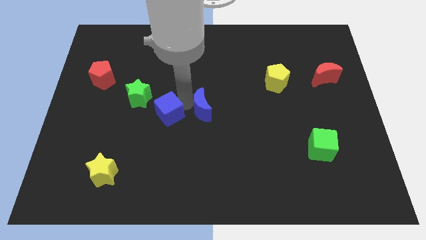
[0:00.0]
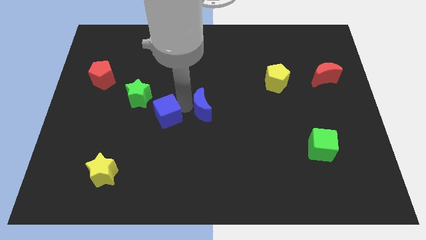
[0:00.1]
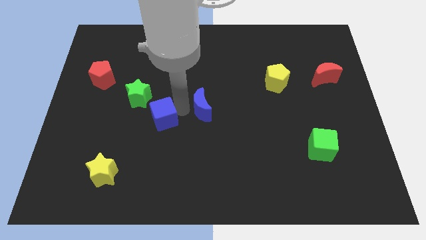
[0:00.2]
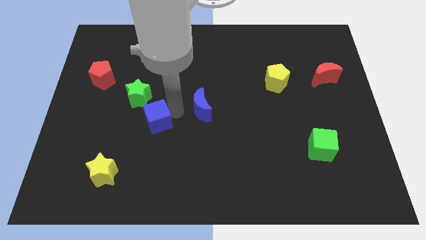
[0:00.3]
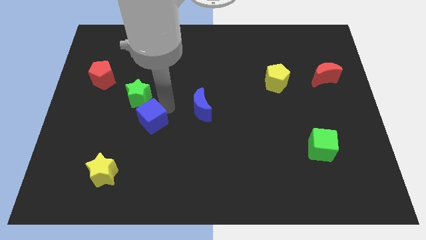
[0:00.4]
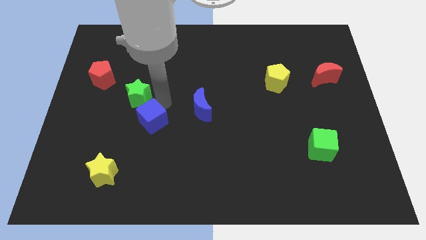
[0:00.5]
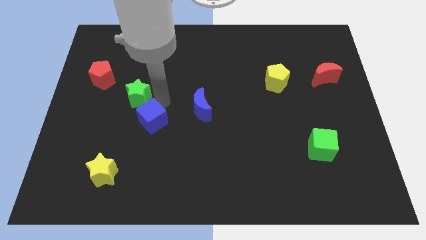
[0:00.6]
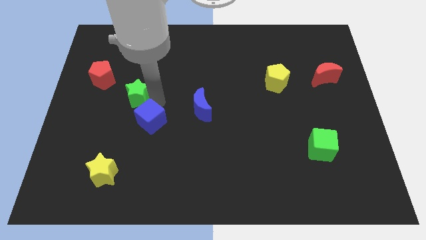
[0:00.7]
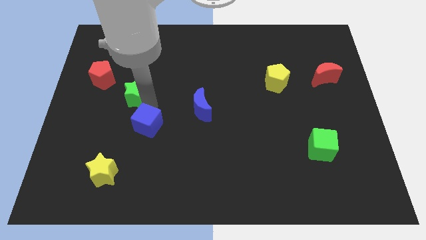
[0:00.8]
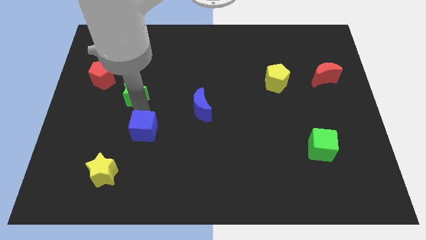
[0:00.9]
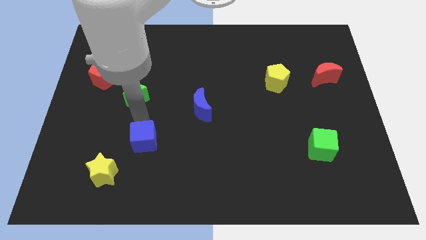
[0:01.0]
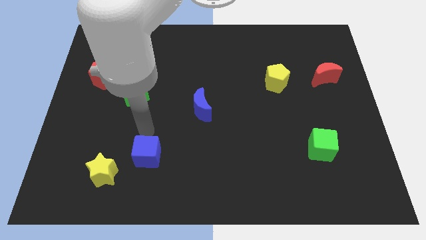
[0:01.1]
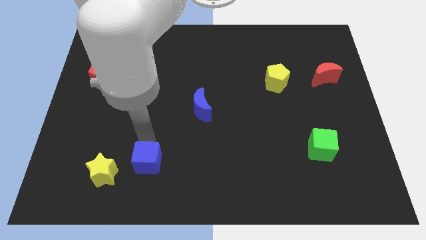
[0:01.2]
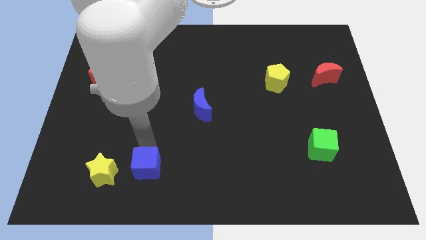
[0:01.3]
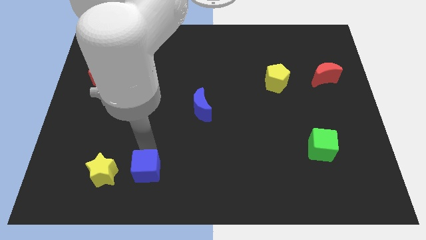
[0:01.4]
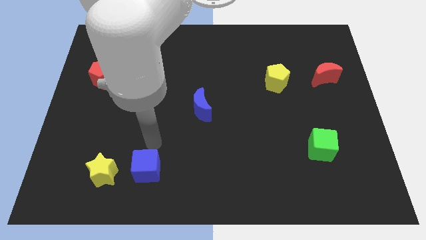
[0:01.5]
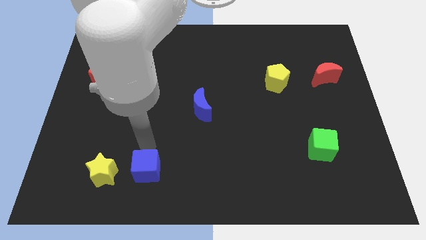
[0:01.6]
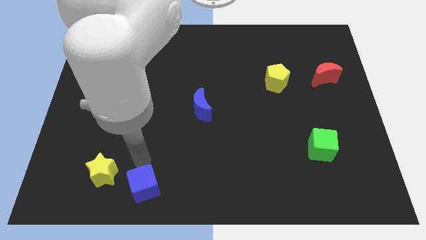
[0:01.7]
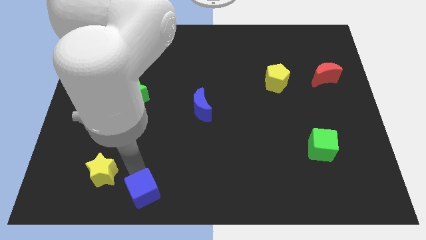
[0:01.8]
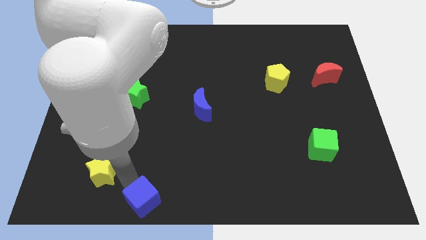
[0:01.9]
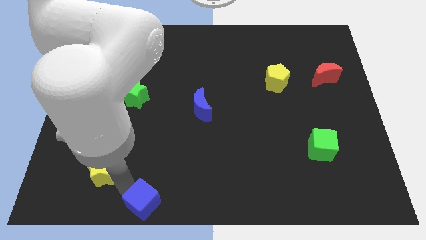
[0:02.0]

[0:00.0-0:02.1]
place blue cube to the bottom right of yellow star

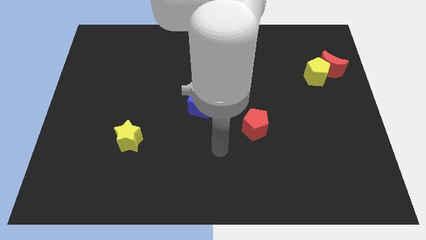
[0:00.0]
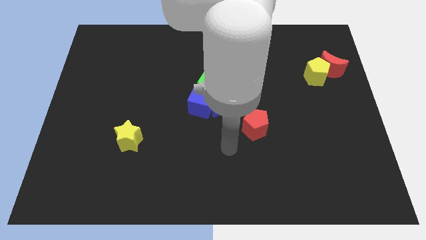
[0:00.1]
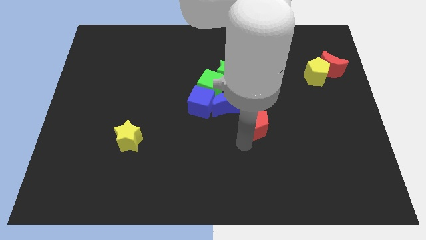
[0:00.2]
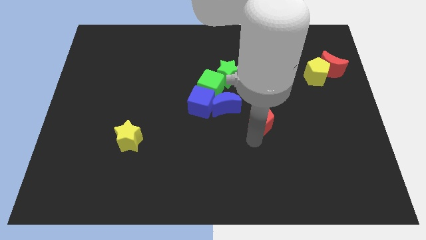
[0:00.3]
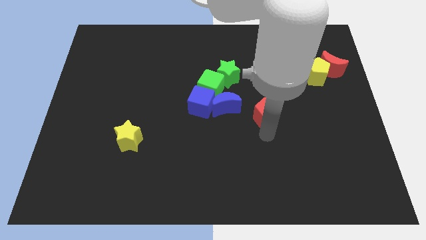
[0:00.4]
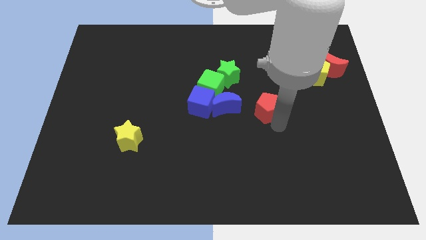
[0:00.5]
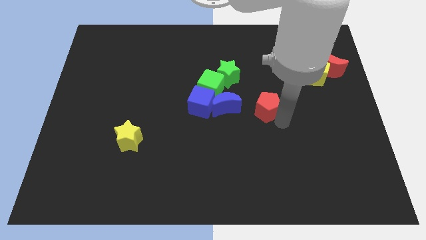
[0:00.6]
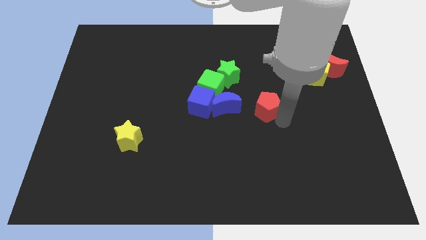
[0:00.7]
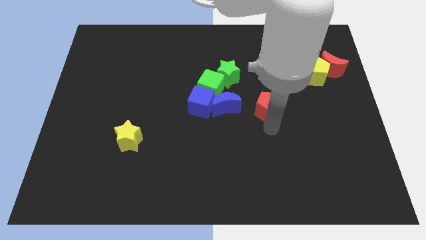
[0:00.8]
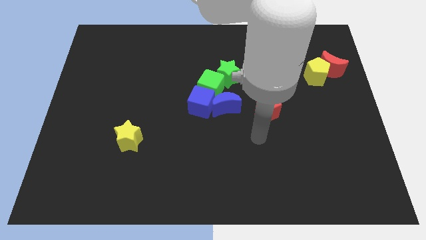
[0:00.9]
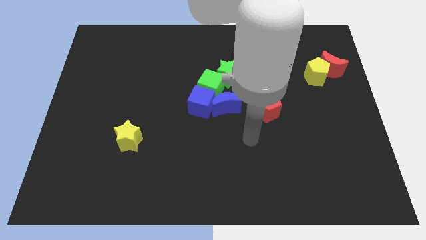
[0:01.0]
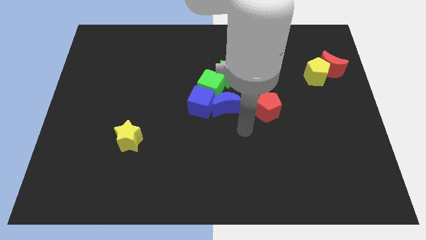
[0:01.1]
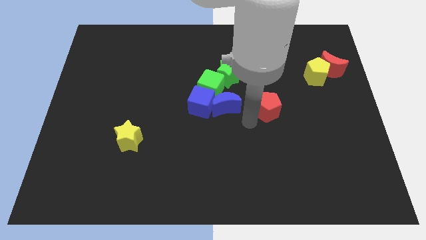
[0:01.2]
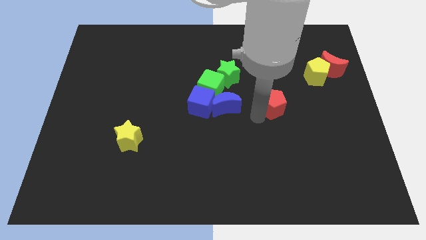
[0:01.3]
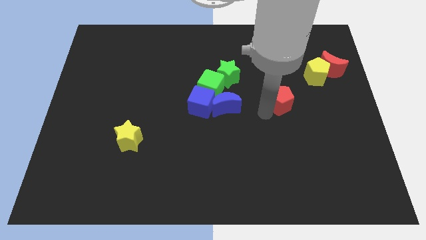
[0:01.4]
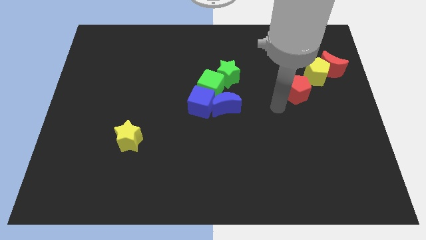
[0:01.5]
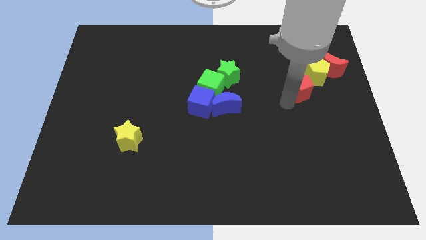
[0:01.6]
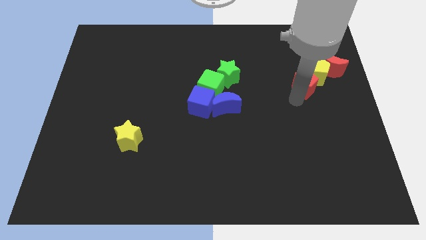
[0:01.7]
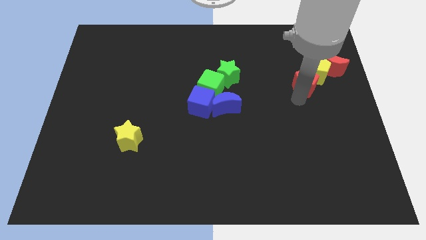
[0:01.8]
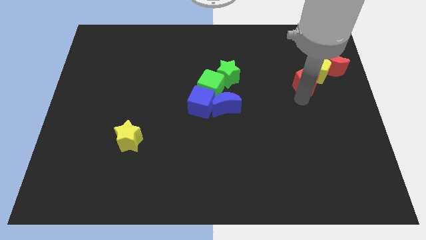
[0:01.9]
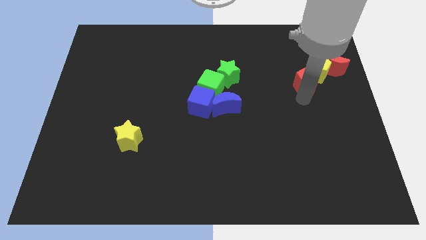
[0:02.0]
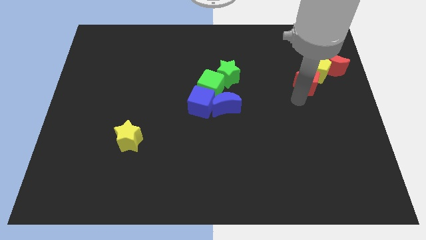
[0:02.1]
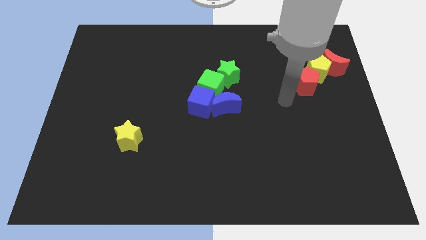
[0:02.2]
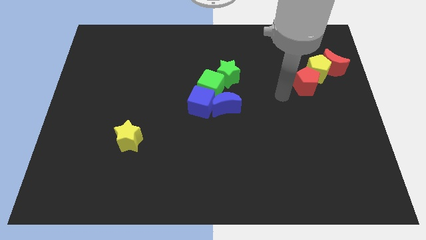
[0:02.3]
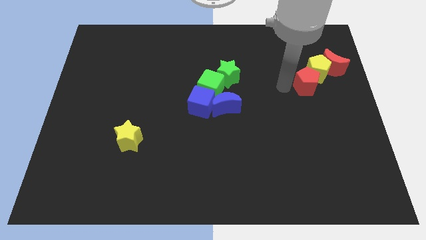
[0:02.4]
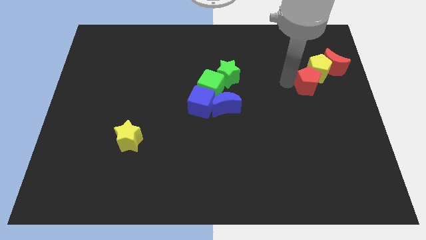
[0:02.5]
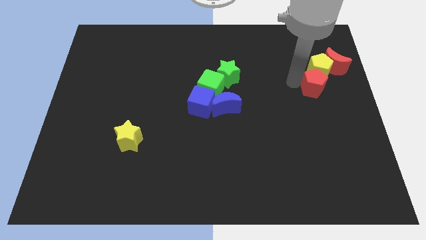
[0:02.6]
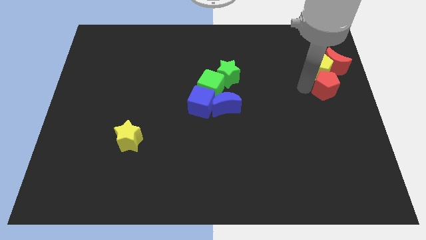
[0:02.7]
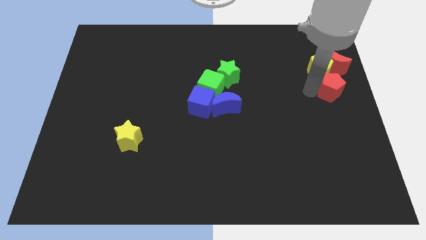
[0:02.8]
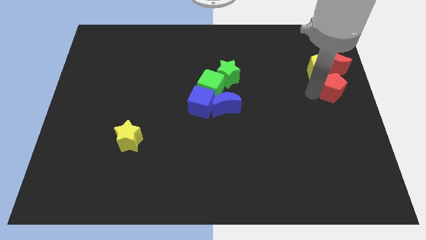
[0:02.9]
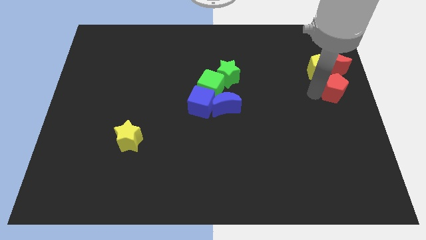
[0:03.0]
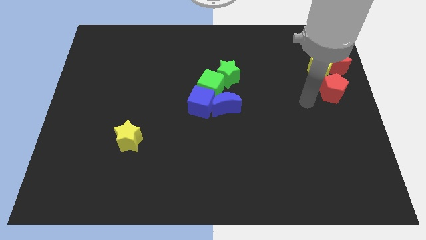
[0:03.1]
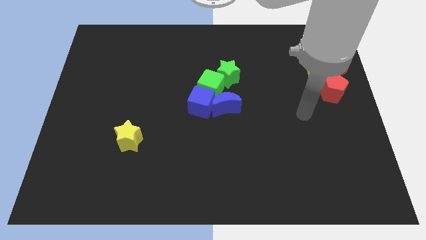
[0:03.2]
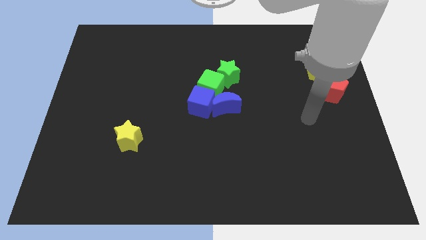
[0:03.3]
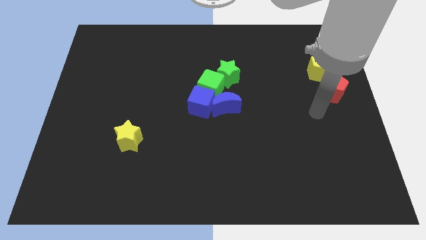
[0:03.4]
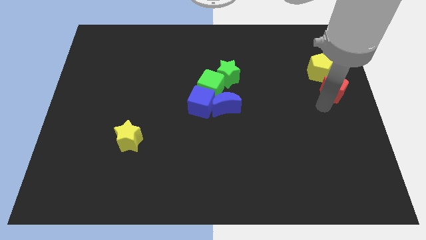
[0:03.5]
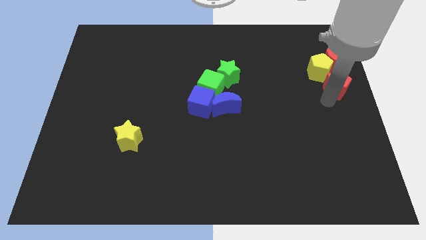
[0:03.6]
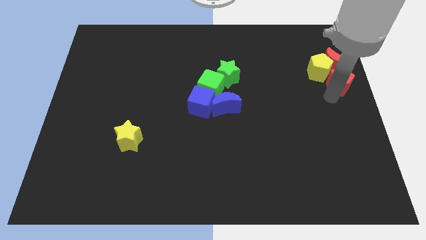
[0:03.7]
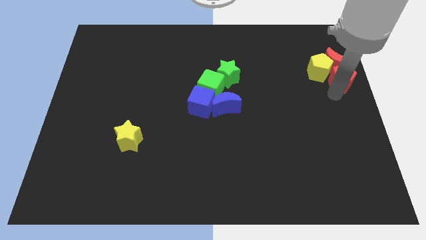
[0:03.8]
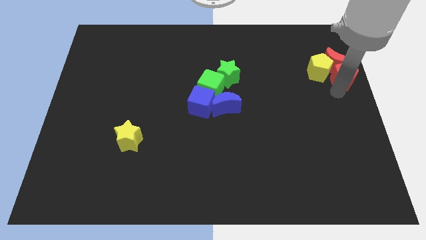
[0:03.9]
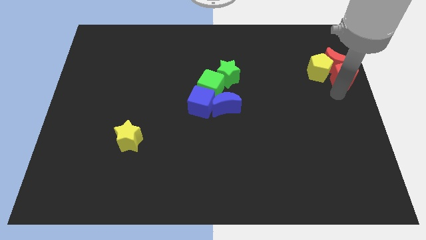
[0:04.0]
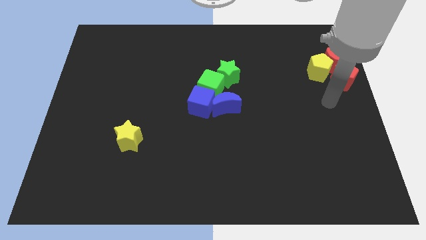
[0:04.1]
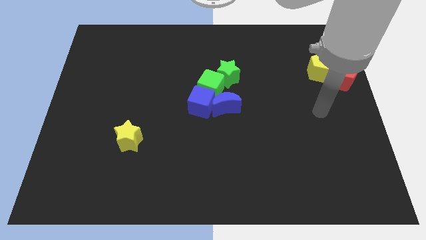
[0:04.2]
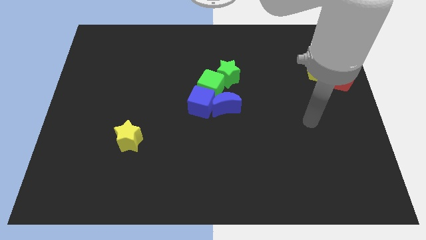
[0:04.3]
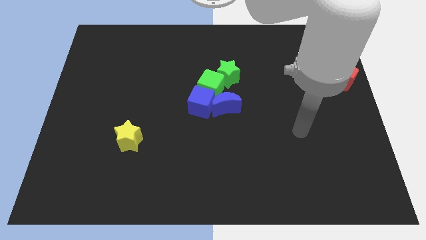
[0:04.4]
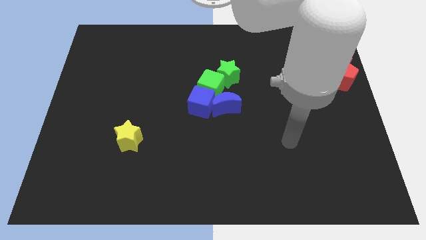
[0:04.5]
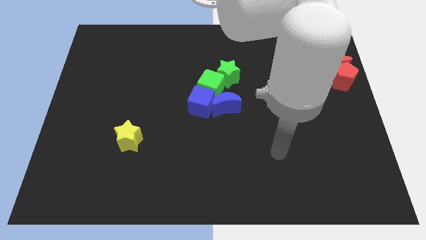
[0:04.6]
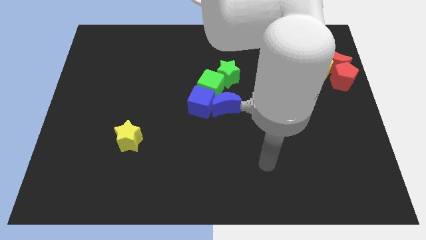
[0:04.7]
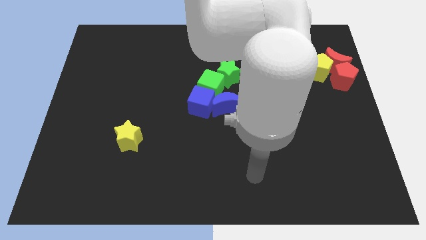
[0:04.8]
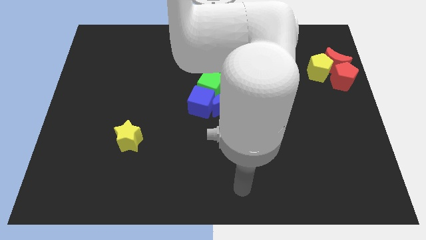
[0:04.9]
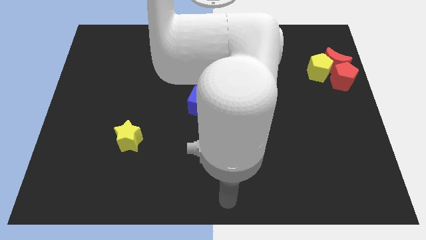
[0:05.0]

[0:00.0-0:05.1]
push the red pentagon into the red crescent

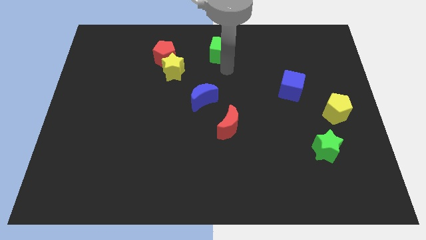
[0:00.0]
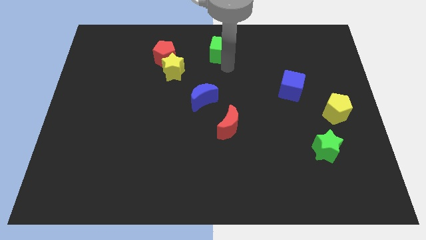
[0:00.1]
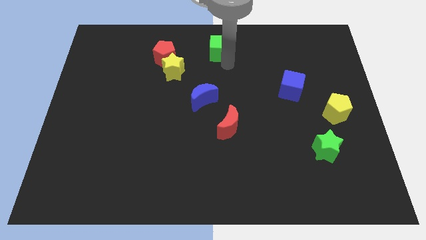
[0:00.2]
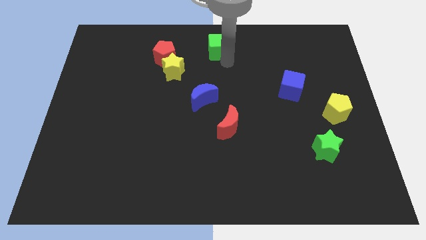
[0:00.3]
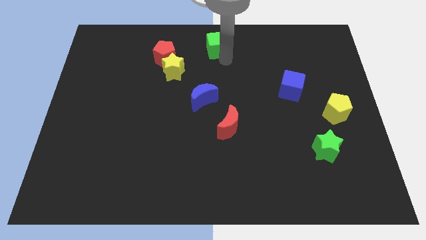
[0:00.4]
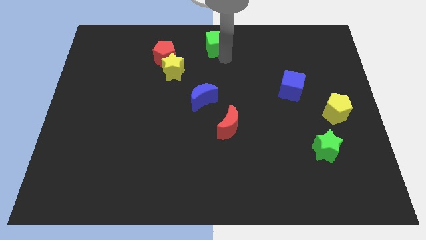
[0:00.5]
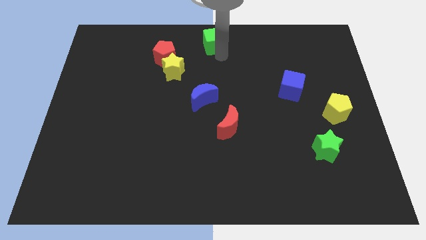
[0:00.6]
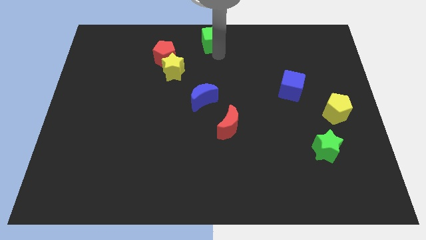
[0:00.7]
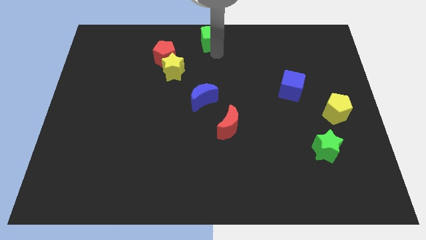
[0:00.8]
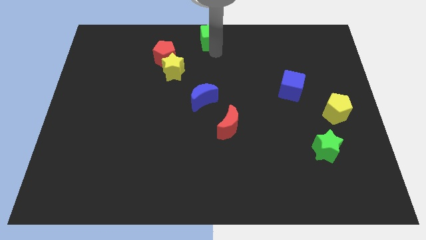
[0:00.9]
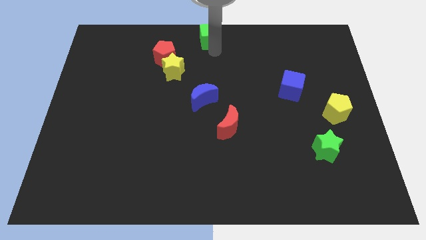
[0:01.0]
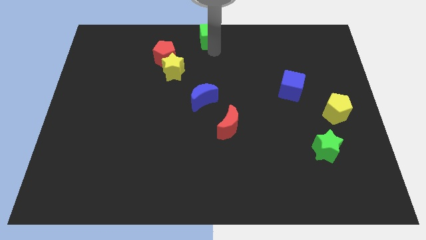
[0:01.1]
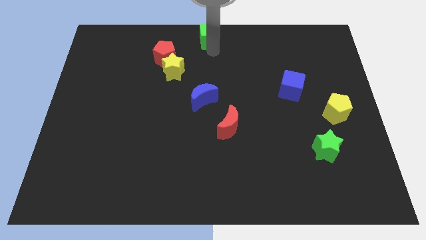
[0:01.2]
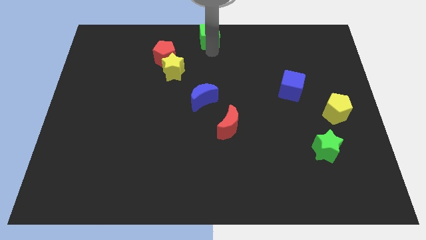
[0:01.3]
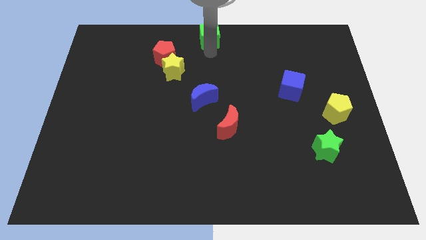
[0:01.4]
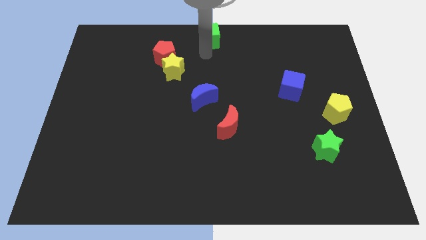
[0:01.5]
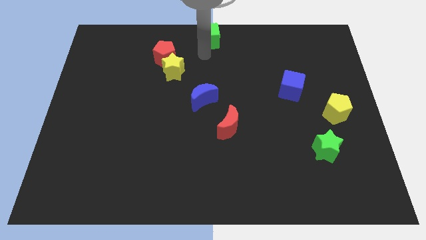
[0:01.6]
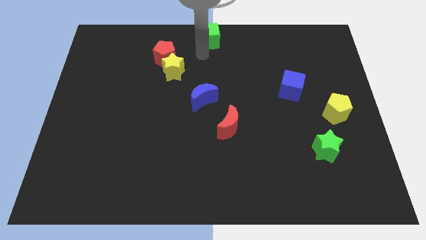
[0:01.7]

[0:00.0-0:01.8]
move the green cube to the top center of the board
